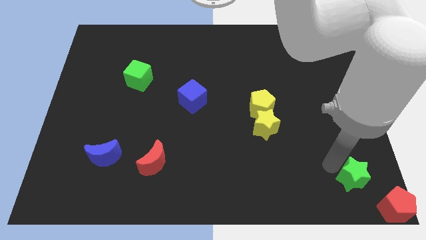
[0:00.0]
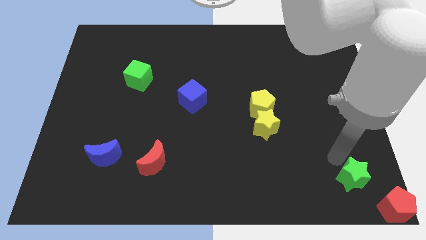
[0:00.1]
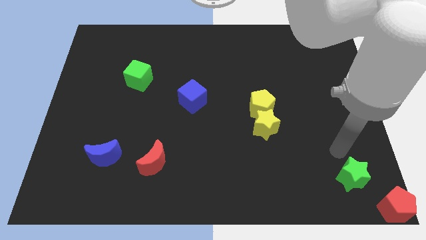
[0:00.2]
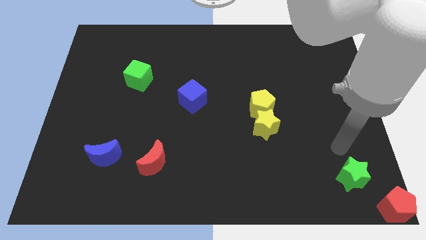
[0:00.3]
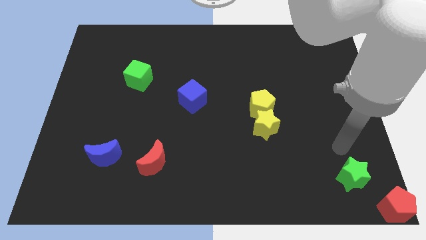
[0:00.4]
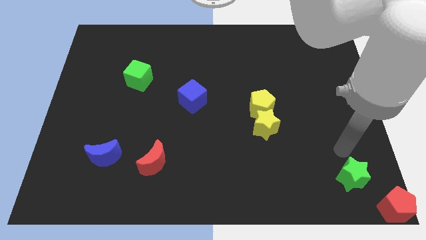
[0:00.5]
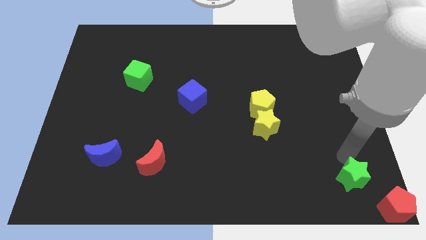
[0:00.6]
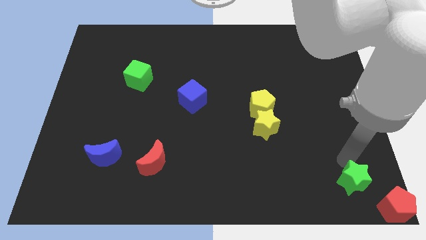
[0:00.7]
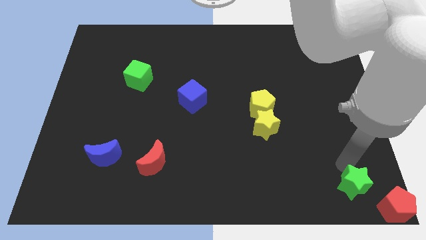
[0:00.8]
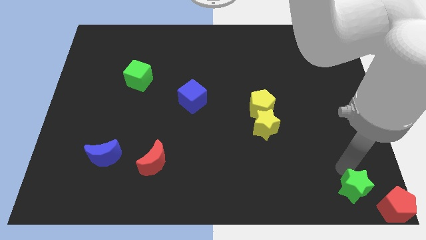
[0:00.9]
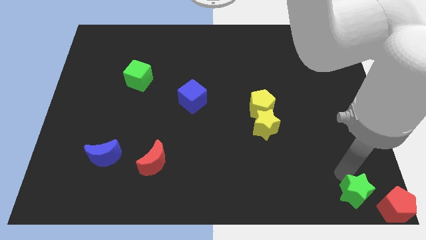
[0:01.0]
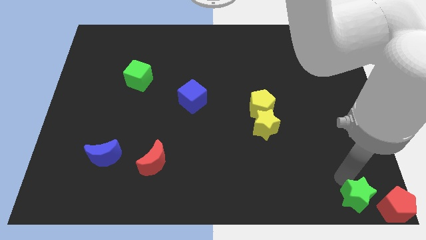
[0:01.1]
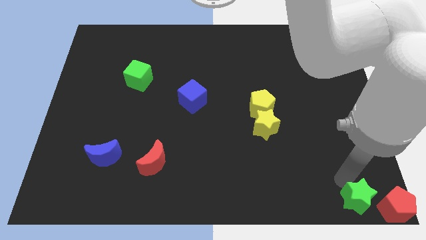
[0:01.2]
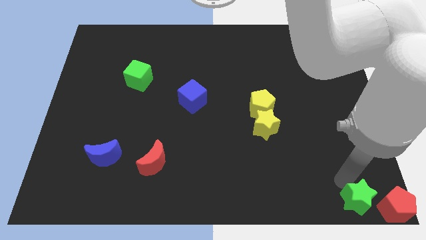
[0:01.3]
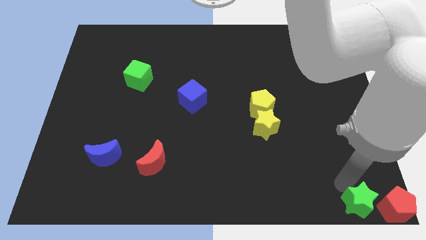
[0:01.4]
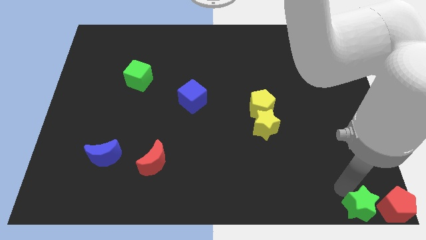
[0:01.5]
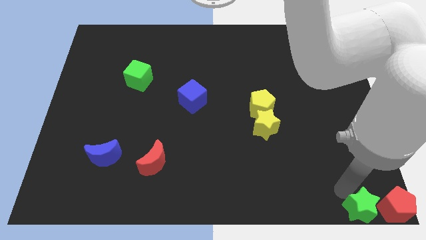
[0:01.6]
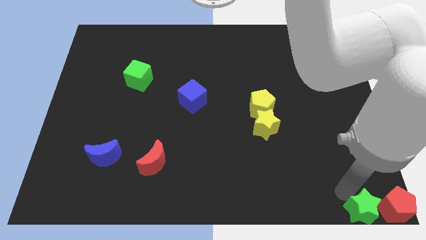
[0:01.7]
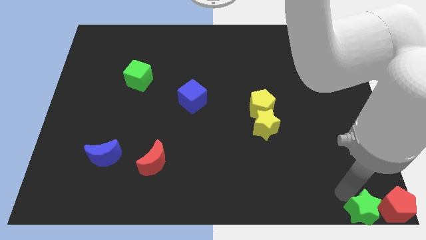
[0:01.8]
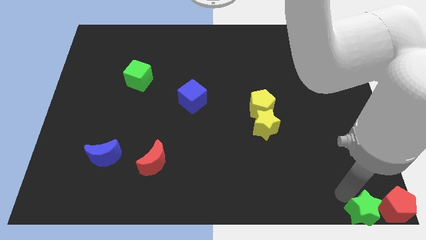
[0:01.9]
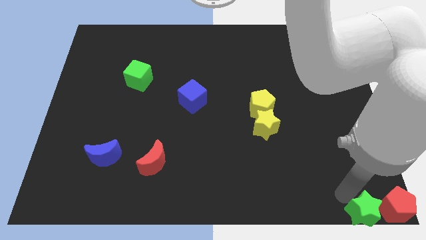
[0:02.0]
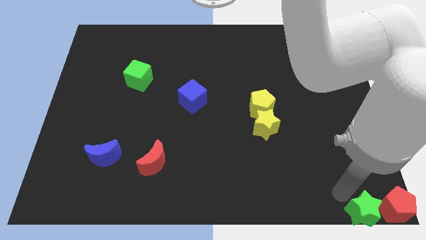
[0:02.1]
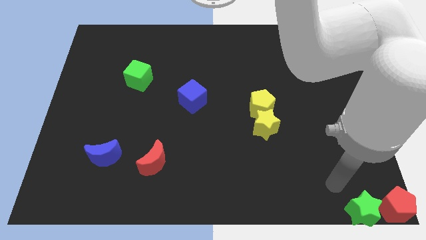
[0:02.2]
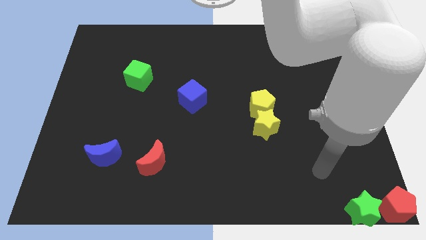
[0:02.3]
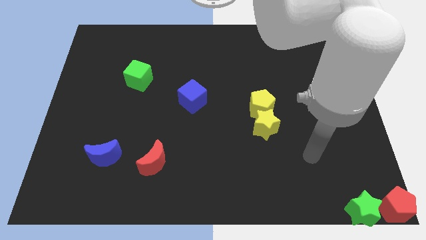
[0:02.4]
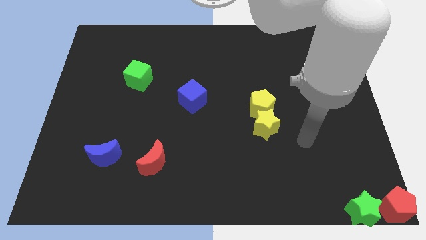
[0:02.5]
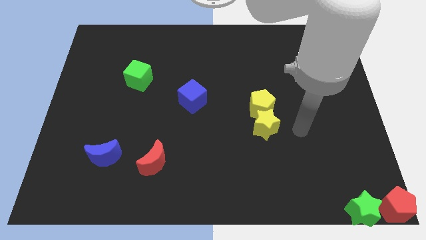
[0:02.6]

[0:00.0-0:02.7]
place the green star close to the red pentagon

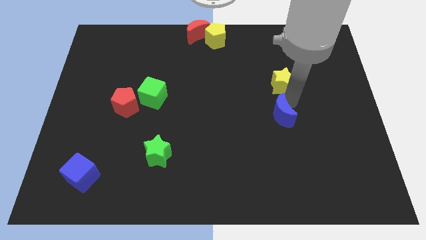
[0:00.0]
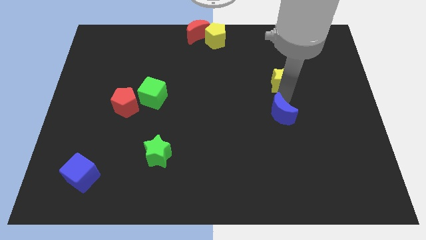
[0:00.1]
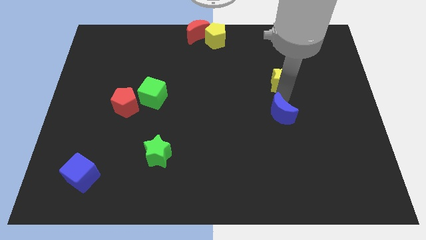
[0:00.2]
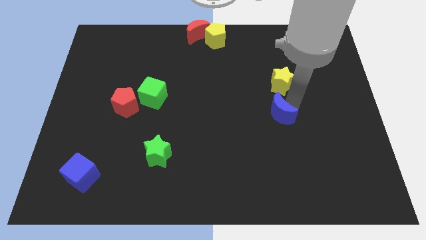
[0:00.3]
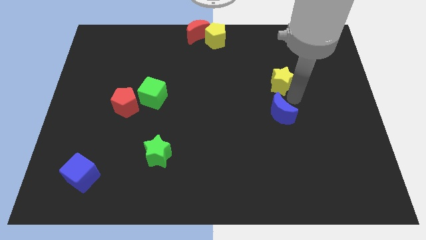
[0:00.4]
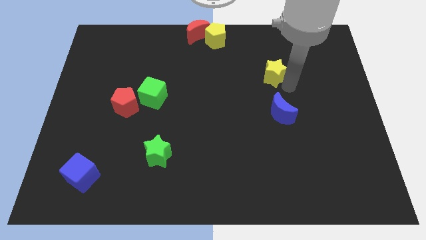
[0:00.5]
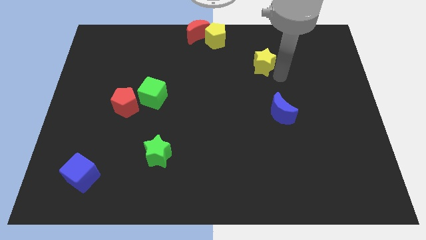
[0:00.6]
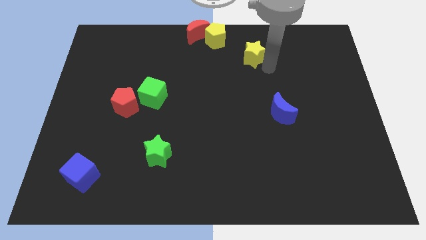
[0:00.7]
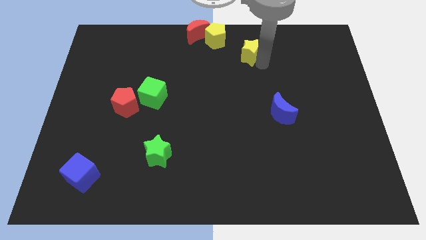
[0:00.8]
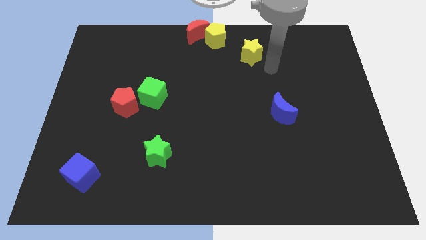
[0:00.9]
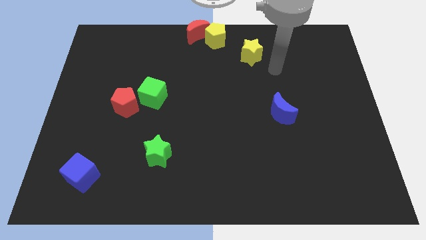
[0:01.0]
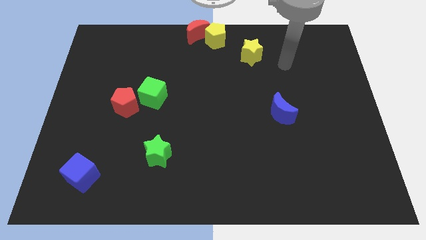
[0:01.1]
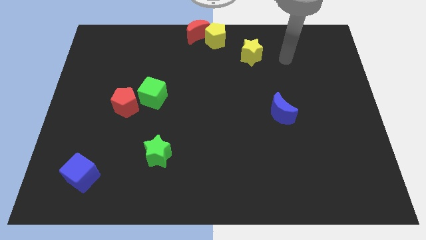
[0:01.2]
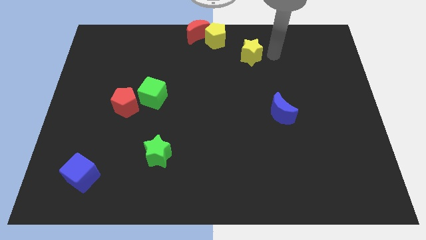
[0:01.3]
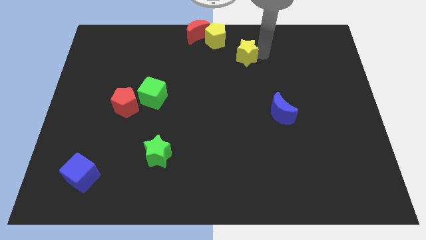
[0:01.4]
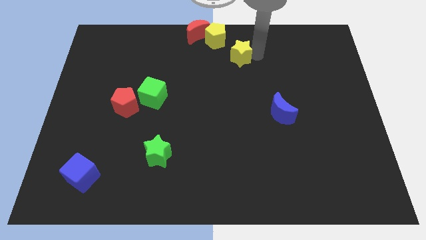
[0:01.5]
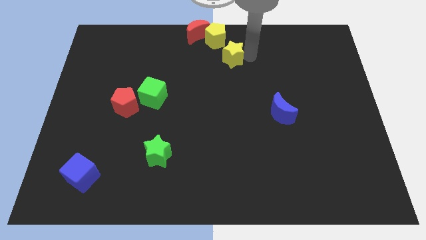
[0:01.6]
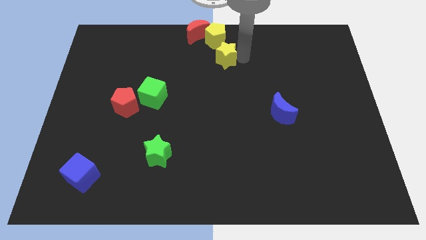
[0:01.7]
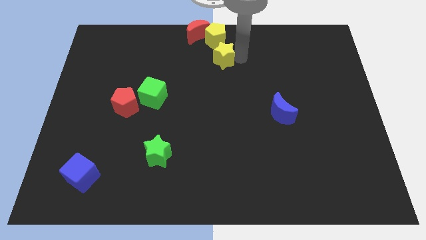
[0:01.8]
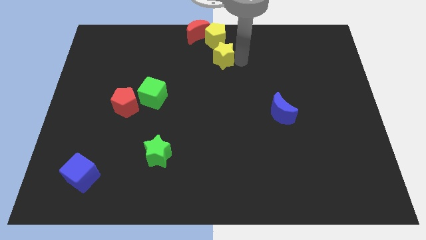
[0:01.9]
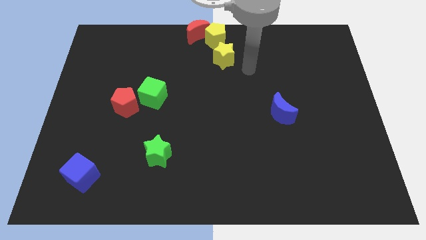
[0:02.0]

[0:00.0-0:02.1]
move yellow star below yellow pentagon

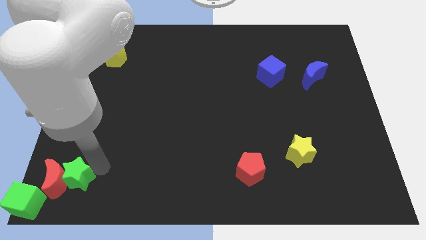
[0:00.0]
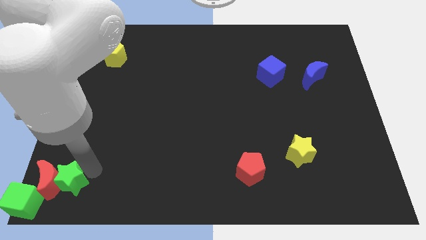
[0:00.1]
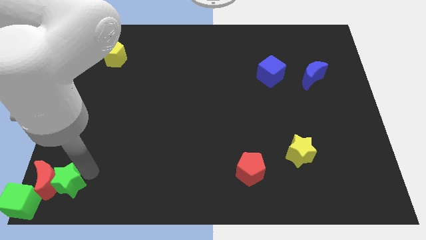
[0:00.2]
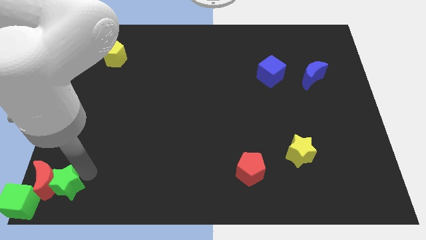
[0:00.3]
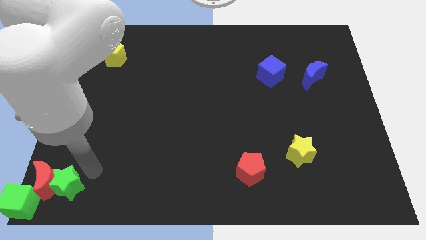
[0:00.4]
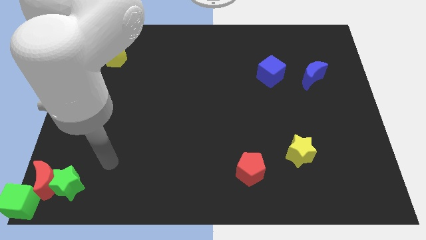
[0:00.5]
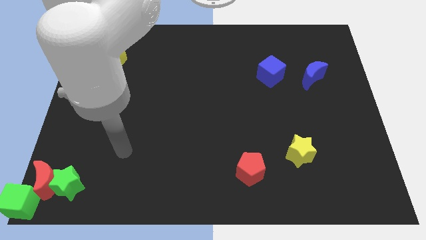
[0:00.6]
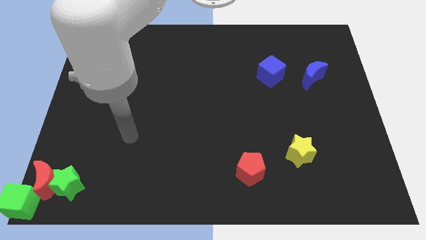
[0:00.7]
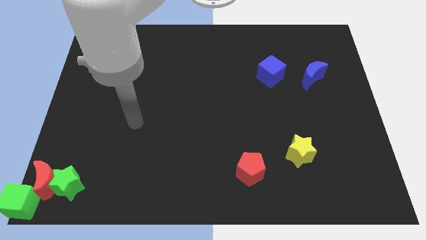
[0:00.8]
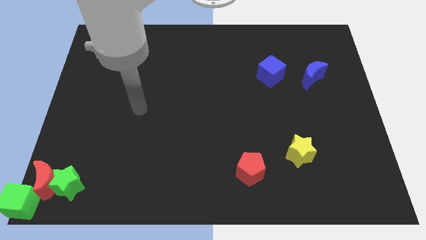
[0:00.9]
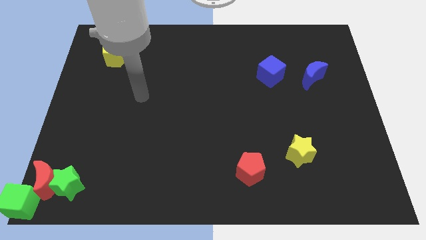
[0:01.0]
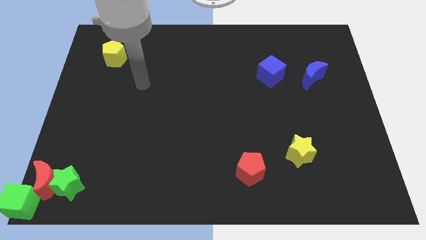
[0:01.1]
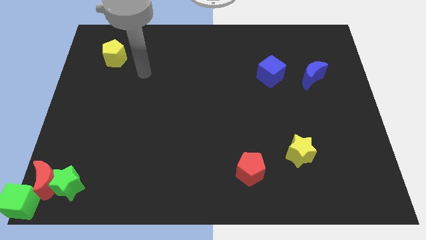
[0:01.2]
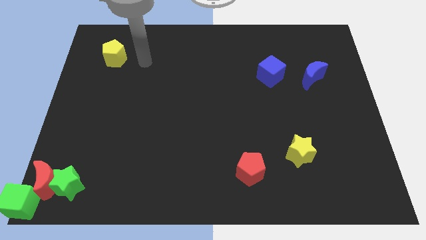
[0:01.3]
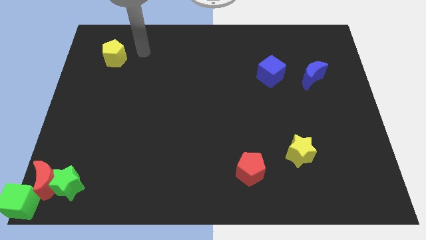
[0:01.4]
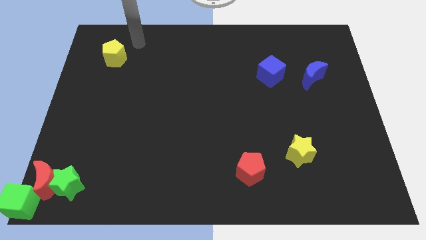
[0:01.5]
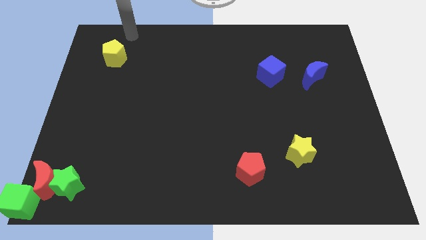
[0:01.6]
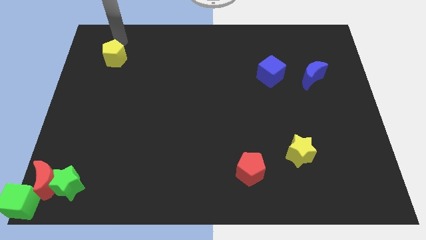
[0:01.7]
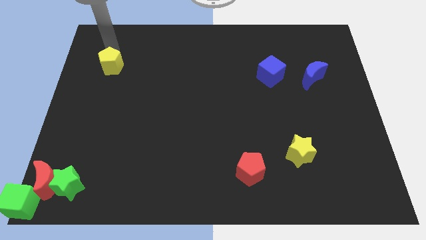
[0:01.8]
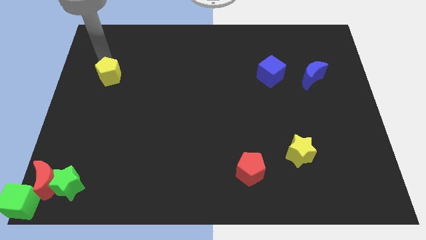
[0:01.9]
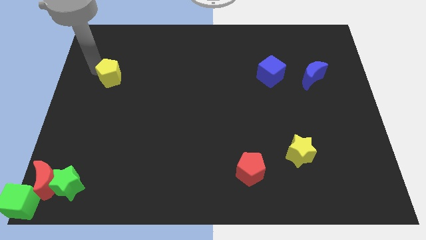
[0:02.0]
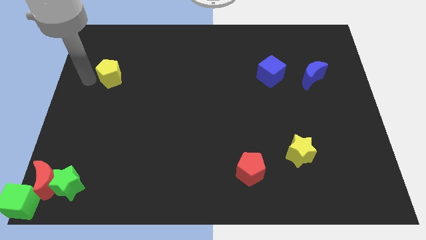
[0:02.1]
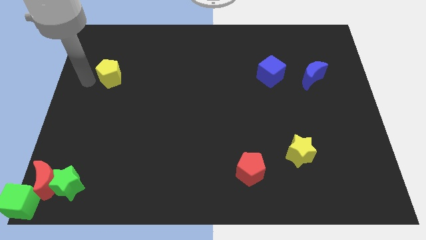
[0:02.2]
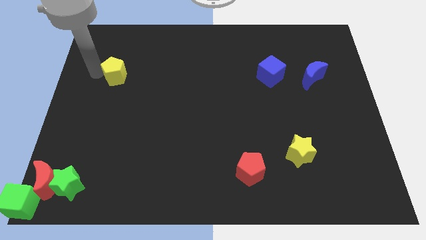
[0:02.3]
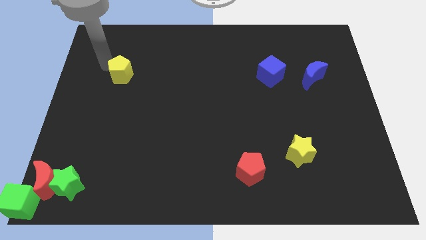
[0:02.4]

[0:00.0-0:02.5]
move the yellow pentagon slightly to the center

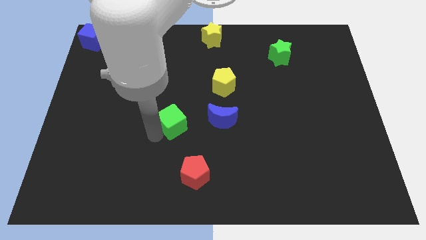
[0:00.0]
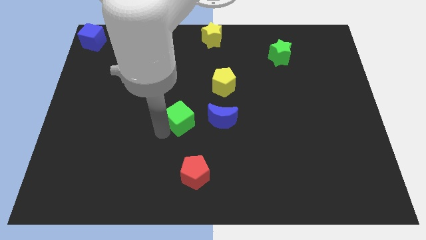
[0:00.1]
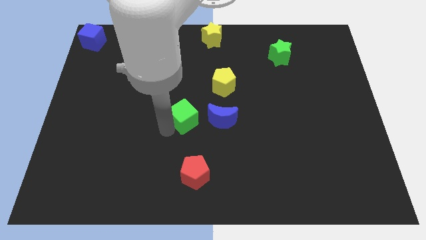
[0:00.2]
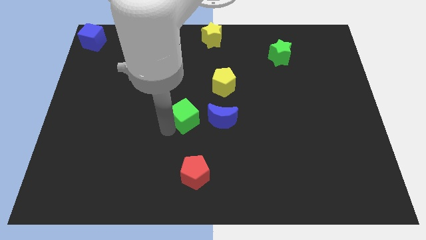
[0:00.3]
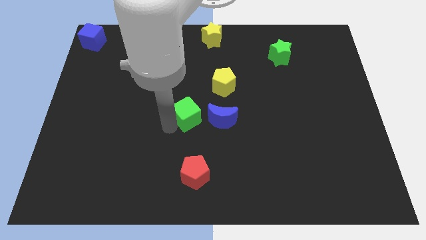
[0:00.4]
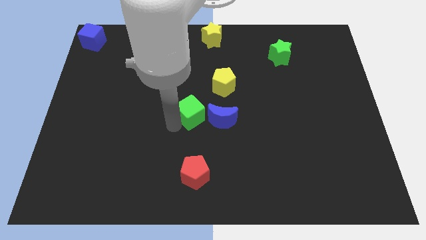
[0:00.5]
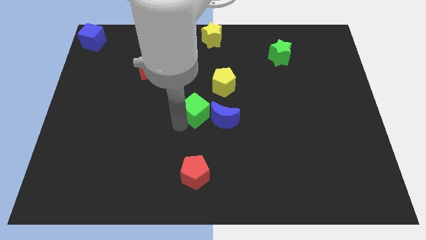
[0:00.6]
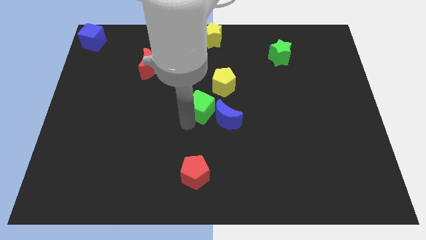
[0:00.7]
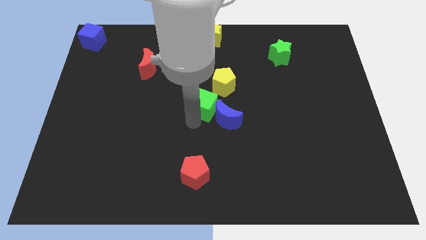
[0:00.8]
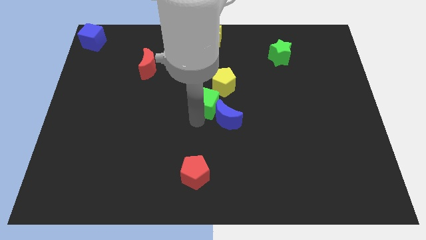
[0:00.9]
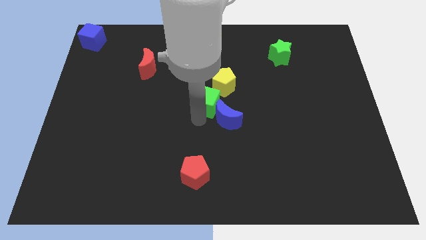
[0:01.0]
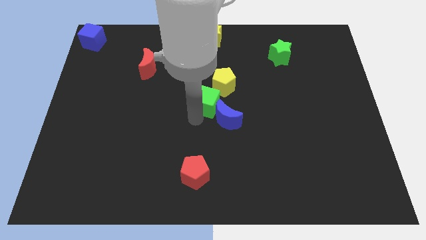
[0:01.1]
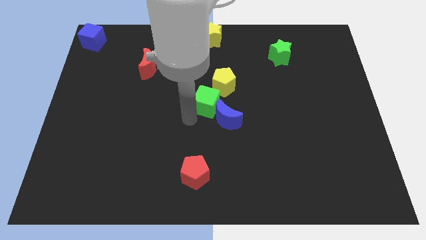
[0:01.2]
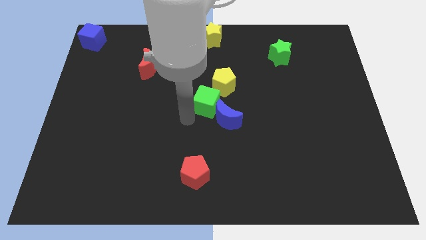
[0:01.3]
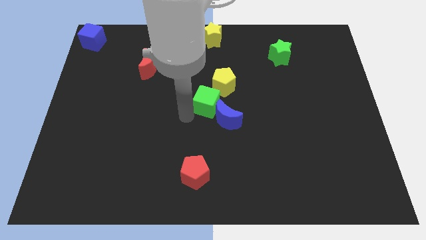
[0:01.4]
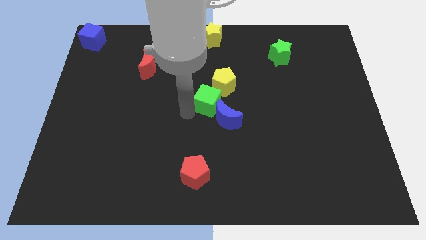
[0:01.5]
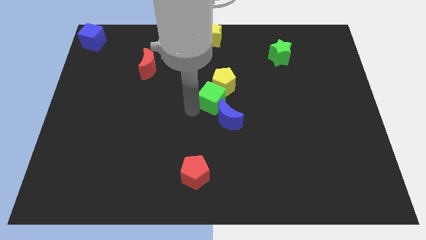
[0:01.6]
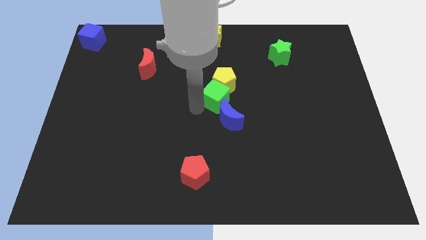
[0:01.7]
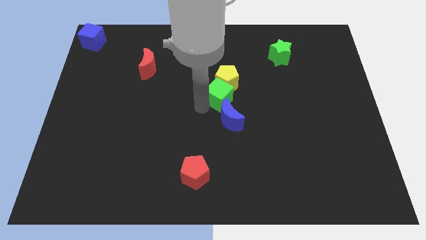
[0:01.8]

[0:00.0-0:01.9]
place the green cube into the yellow pentagon
